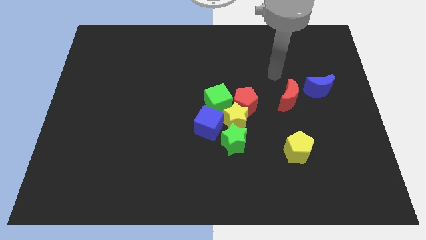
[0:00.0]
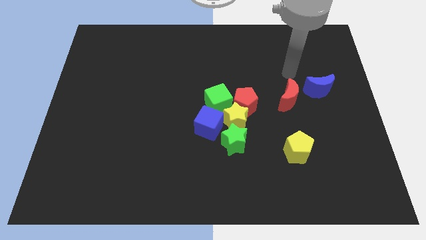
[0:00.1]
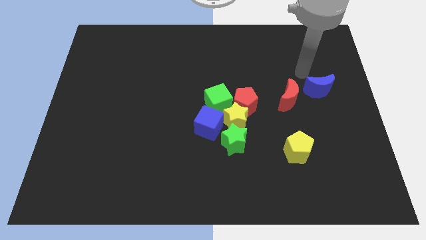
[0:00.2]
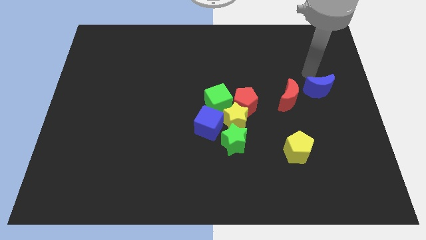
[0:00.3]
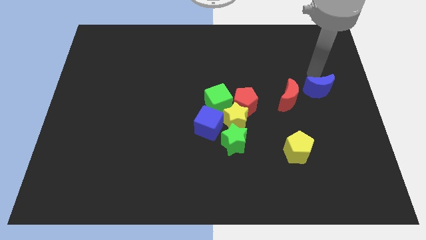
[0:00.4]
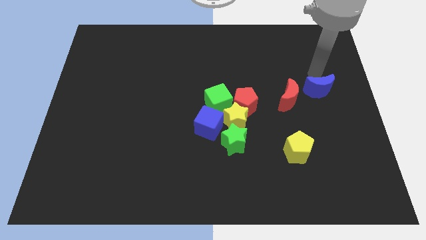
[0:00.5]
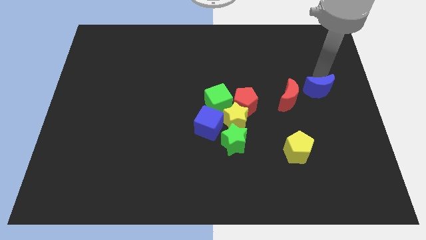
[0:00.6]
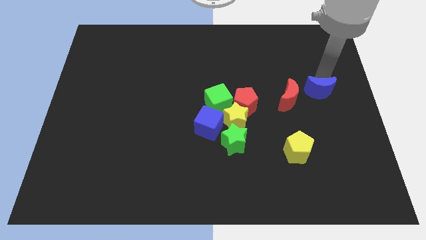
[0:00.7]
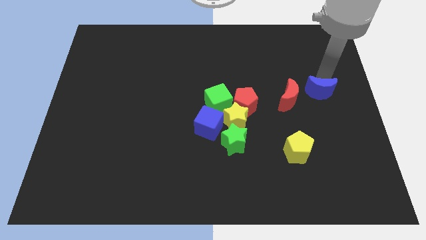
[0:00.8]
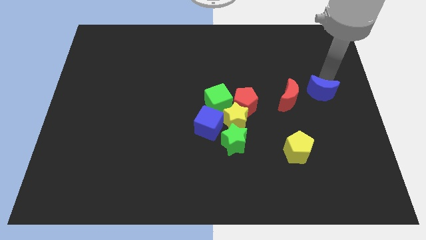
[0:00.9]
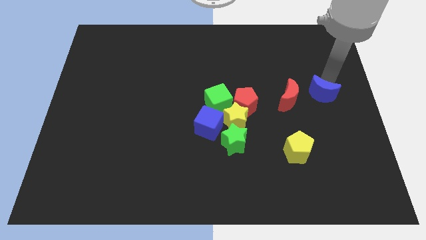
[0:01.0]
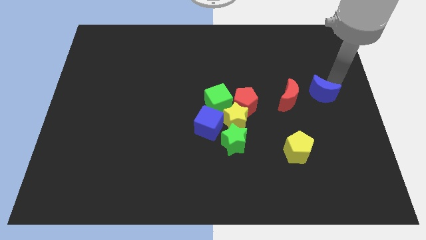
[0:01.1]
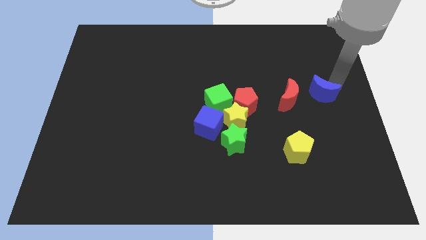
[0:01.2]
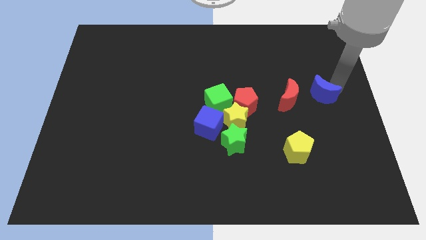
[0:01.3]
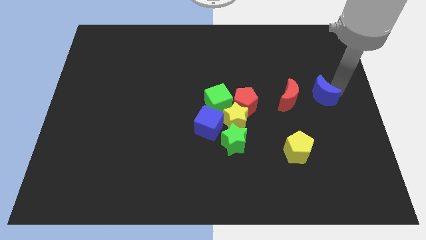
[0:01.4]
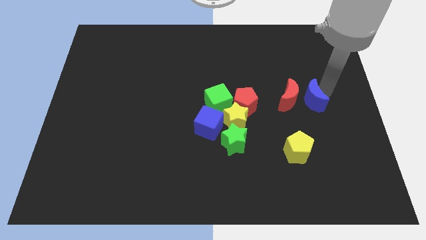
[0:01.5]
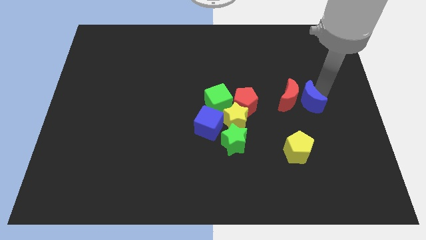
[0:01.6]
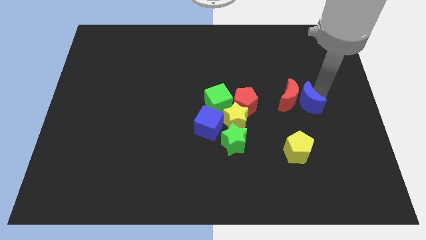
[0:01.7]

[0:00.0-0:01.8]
move blue crescent to the right side of the red crescent

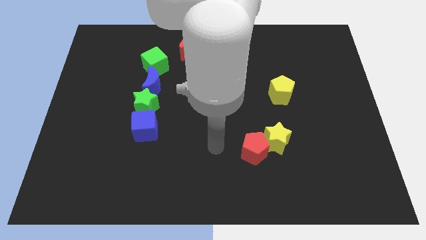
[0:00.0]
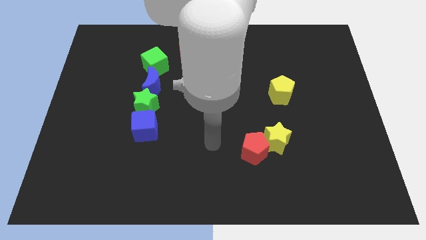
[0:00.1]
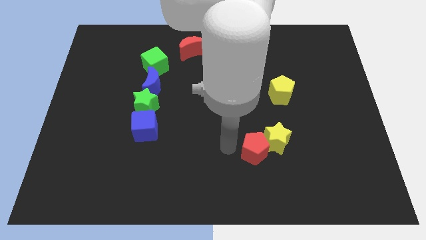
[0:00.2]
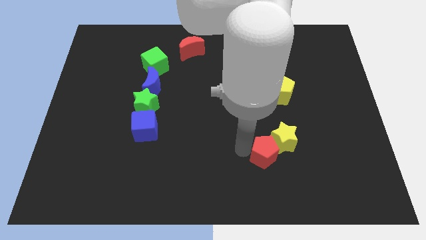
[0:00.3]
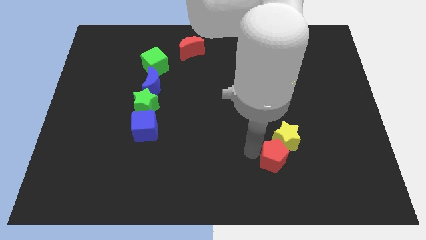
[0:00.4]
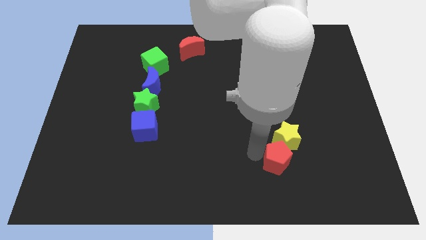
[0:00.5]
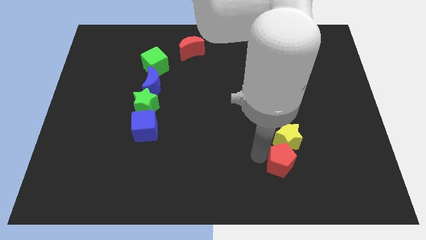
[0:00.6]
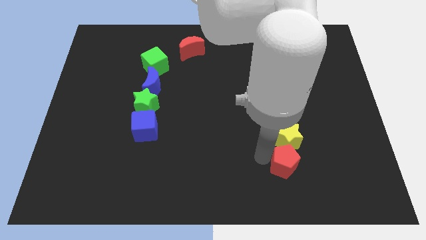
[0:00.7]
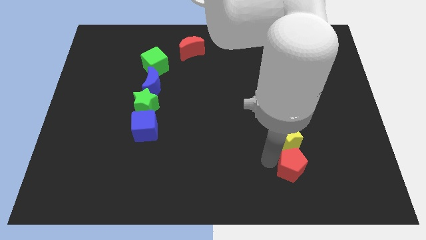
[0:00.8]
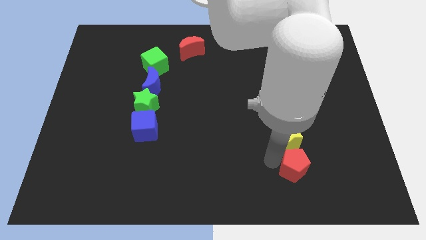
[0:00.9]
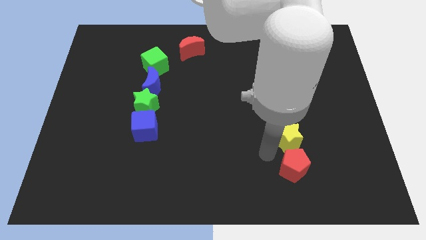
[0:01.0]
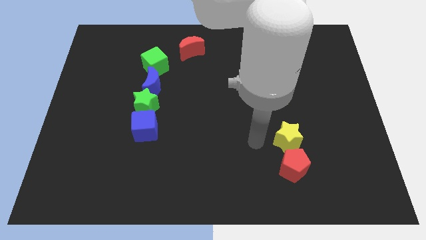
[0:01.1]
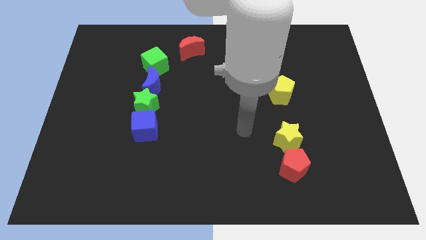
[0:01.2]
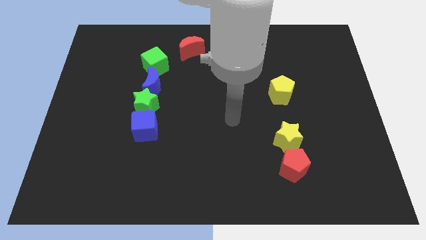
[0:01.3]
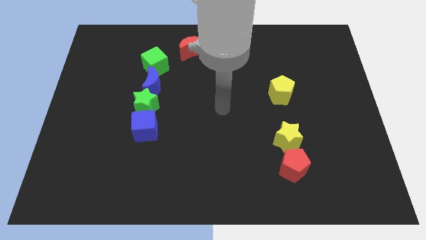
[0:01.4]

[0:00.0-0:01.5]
move the red pentagon below the yellow star

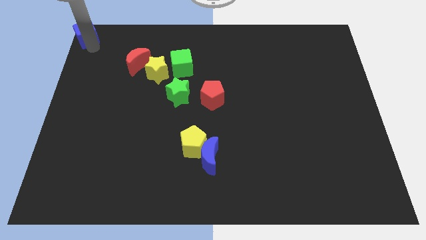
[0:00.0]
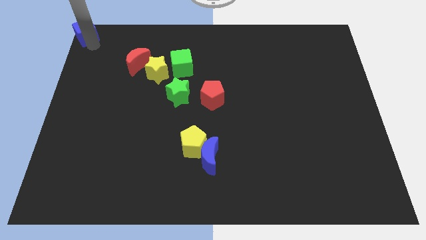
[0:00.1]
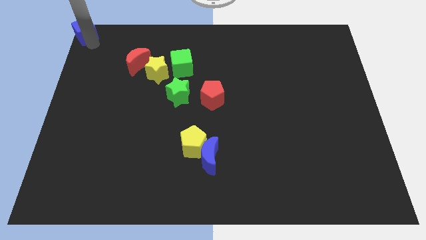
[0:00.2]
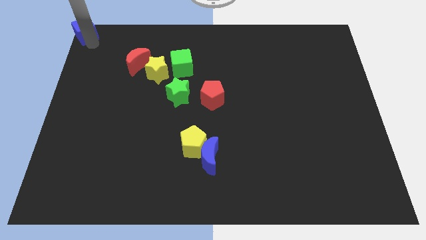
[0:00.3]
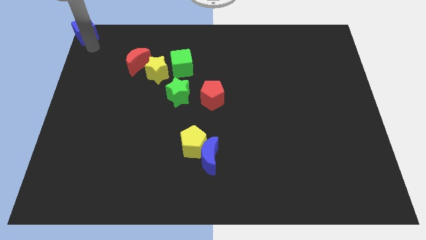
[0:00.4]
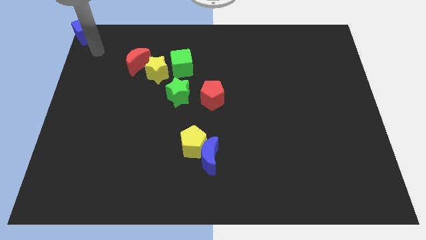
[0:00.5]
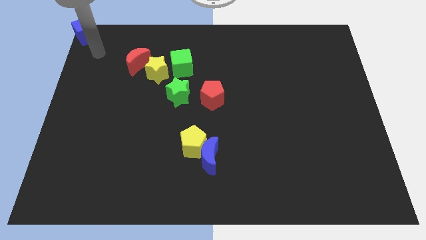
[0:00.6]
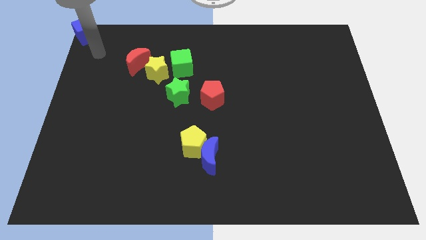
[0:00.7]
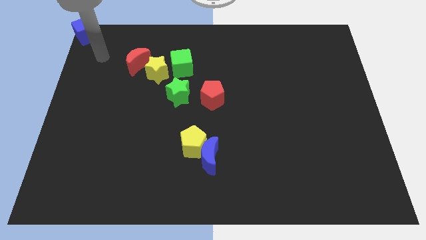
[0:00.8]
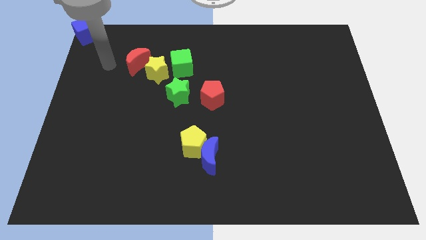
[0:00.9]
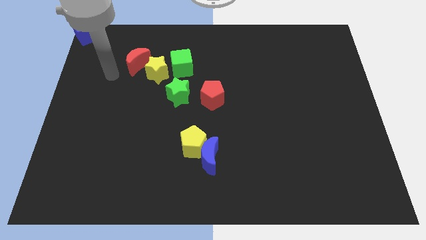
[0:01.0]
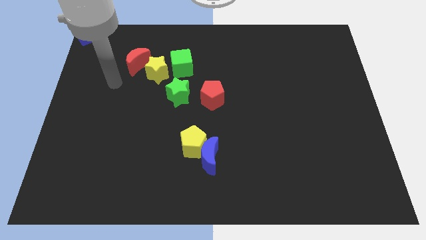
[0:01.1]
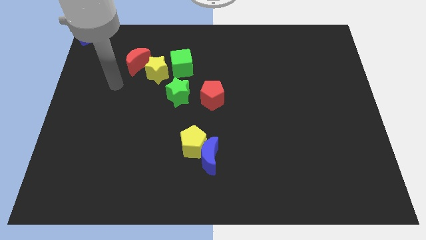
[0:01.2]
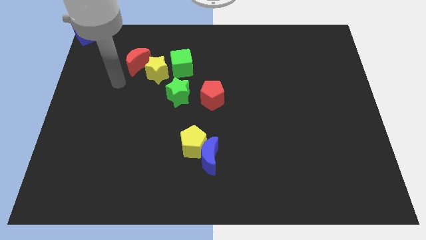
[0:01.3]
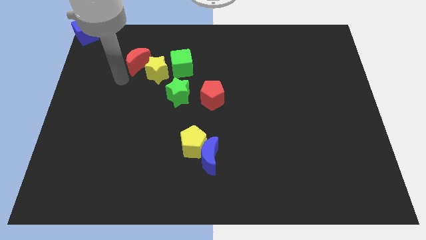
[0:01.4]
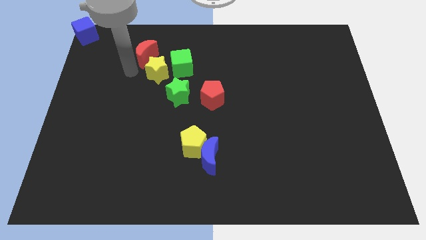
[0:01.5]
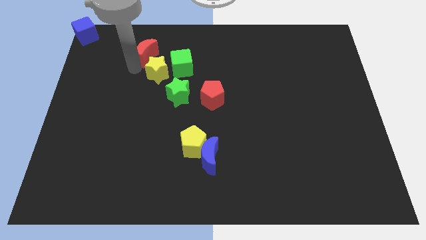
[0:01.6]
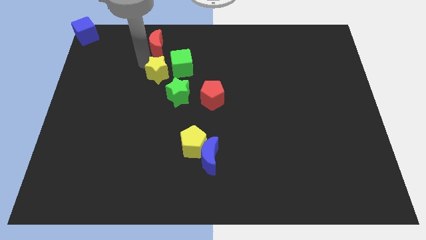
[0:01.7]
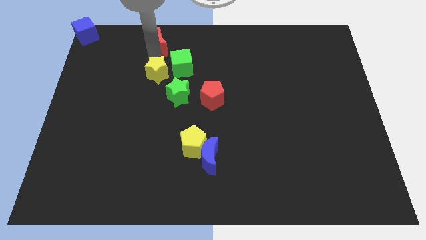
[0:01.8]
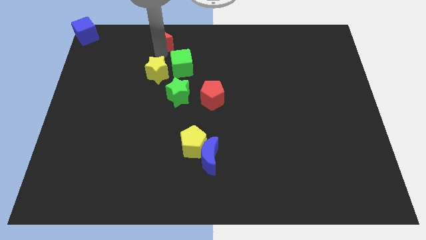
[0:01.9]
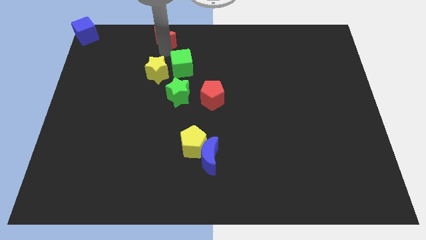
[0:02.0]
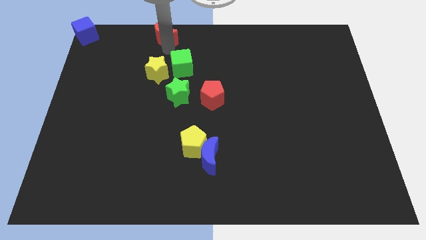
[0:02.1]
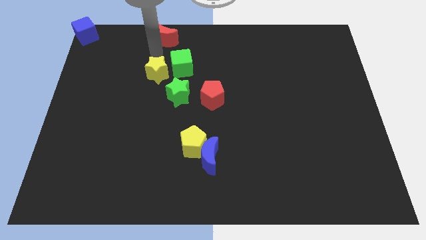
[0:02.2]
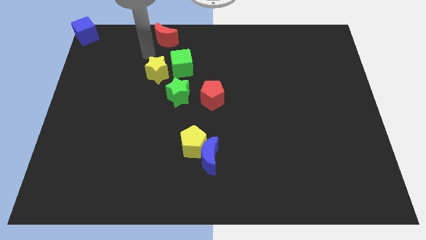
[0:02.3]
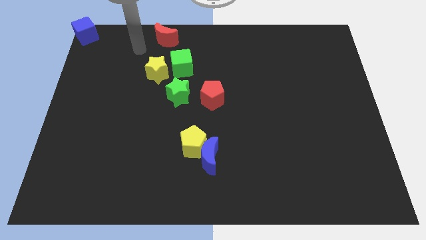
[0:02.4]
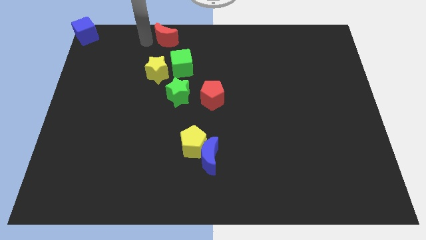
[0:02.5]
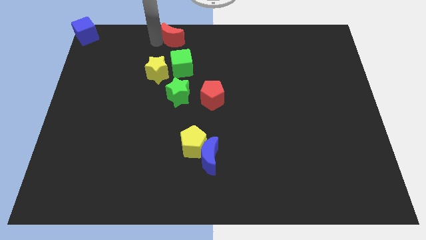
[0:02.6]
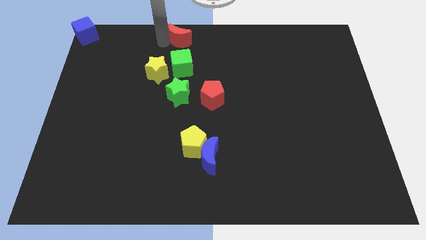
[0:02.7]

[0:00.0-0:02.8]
move the red moon above the green cube

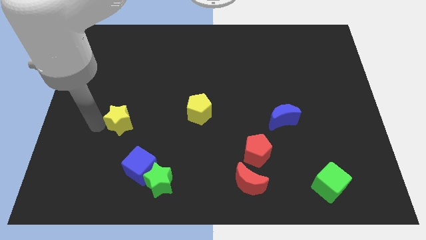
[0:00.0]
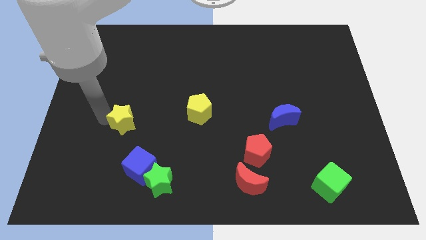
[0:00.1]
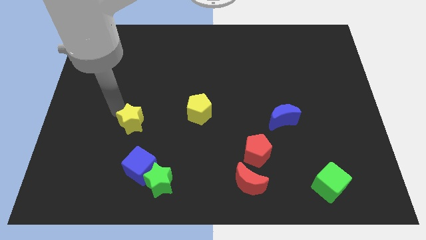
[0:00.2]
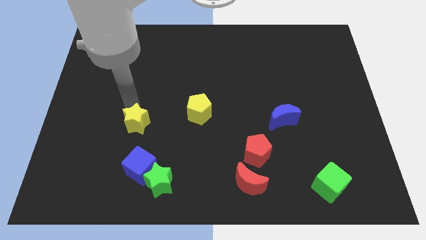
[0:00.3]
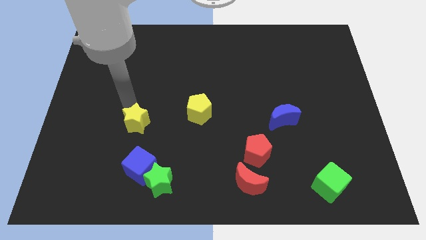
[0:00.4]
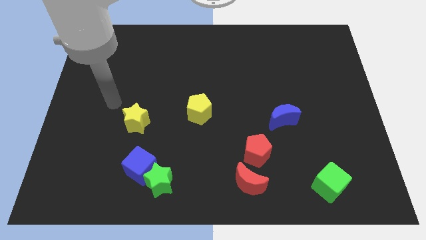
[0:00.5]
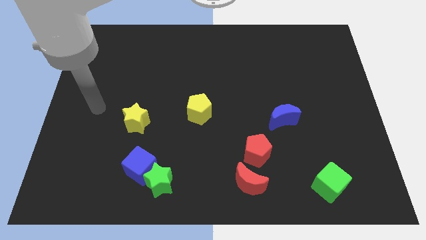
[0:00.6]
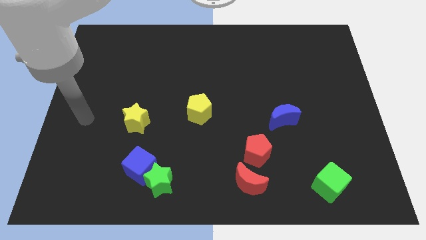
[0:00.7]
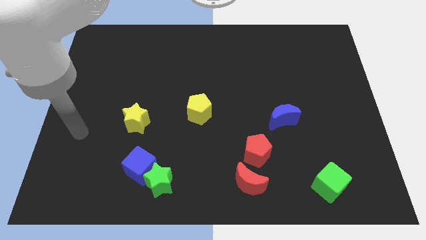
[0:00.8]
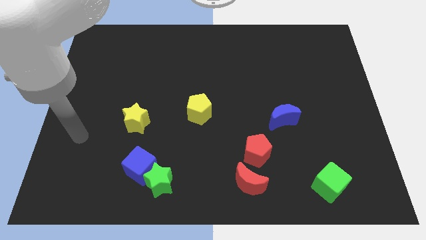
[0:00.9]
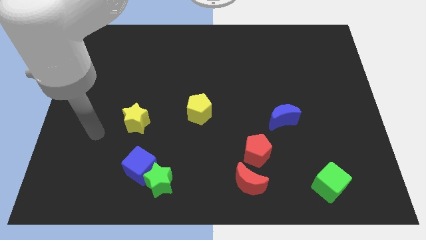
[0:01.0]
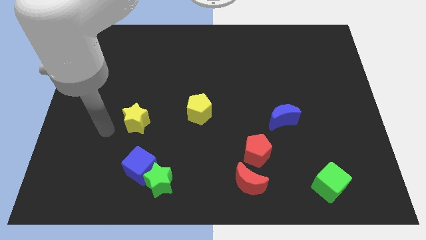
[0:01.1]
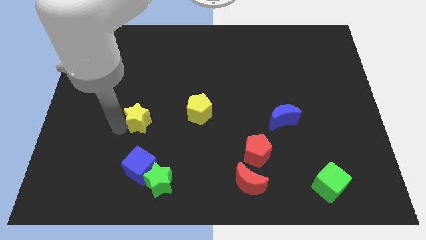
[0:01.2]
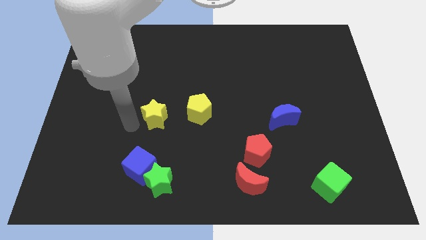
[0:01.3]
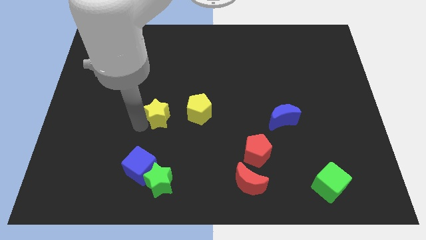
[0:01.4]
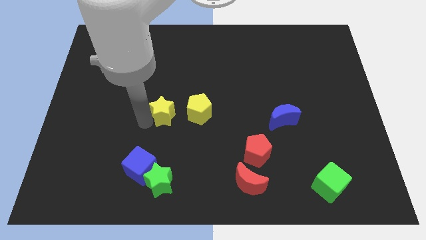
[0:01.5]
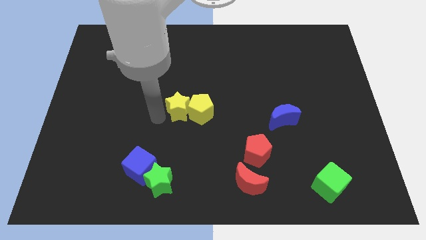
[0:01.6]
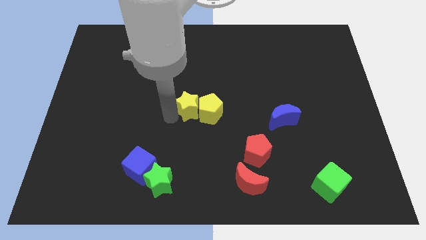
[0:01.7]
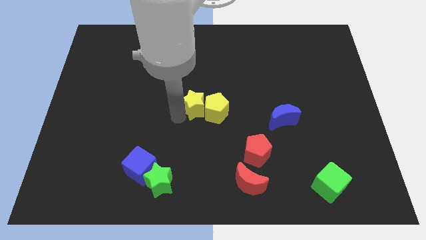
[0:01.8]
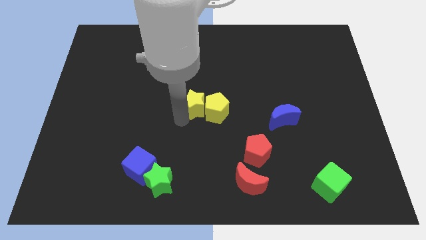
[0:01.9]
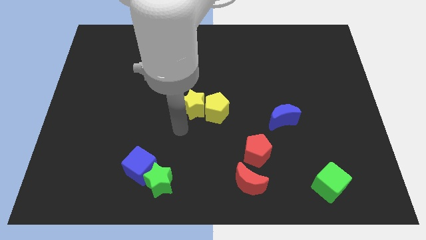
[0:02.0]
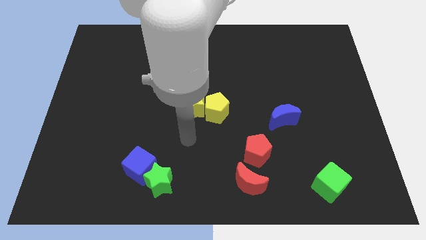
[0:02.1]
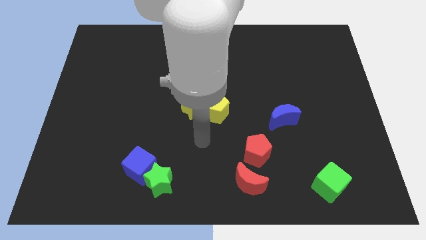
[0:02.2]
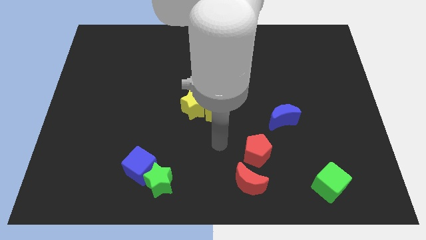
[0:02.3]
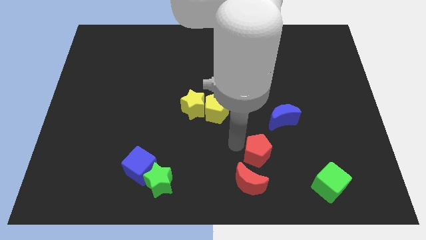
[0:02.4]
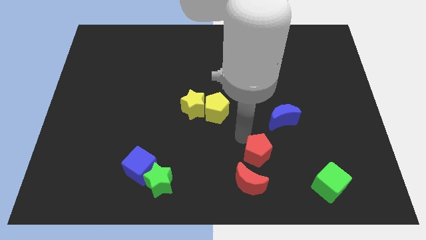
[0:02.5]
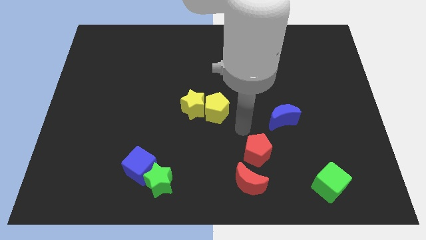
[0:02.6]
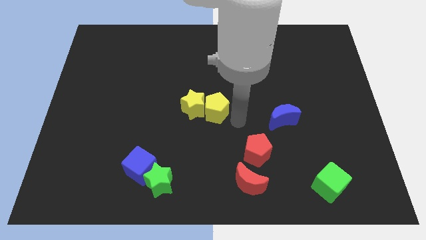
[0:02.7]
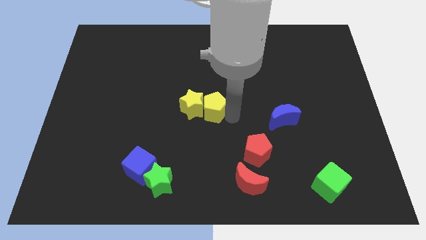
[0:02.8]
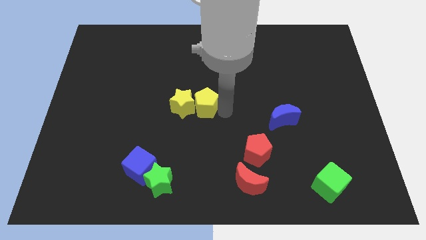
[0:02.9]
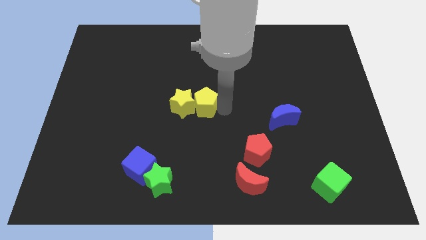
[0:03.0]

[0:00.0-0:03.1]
push the yellow star into the yellow pentagon
